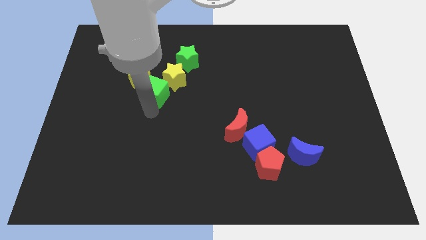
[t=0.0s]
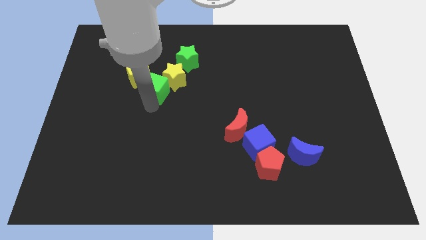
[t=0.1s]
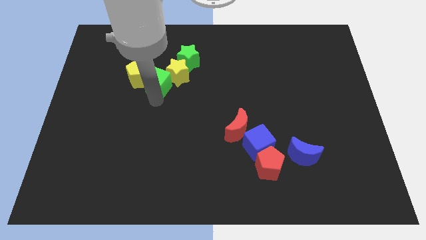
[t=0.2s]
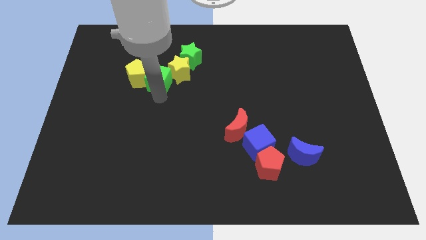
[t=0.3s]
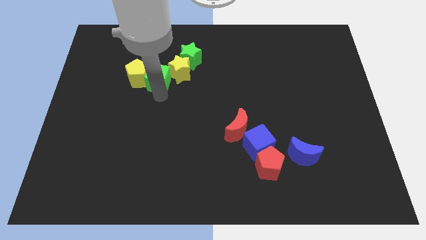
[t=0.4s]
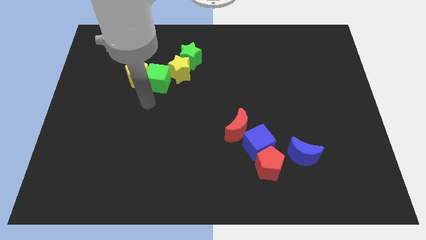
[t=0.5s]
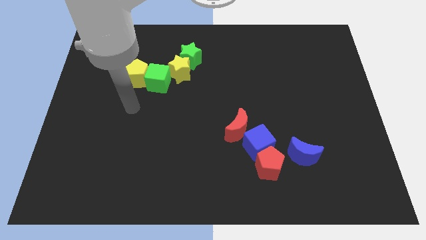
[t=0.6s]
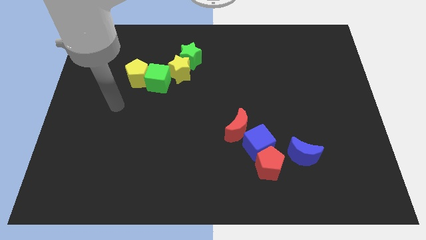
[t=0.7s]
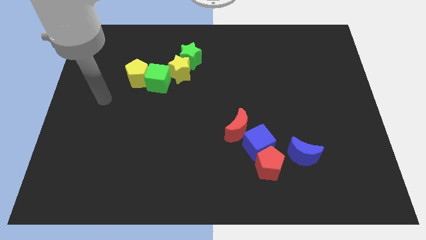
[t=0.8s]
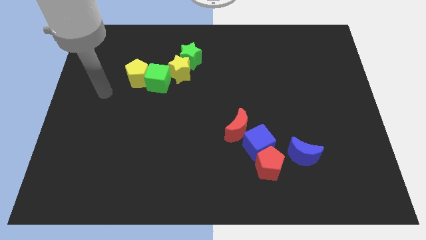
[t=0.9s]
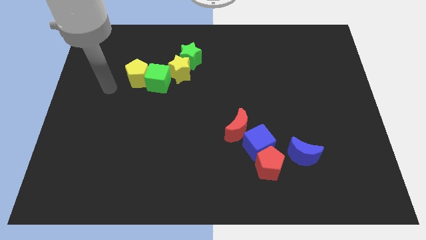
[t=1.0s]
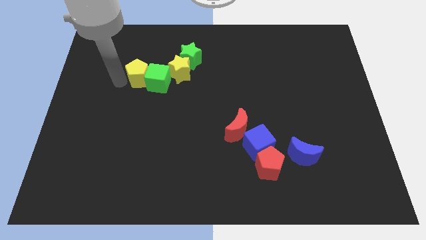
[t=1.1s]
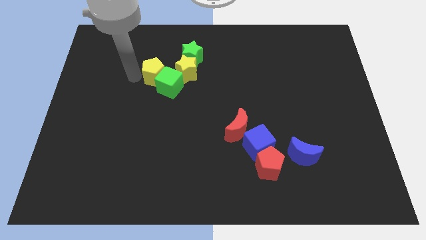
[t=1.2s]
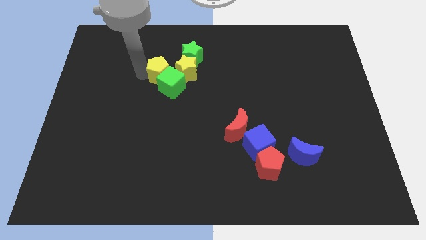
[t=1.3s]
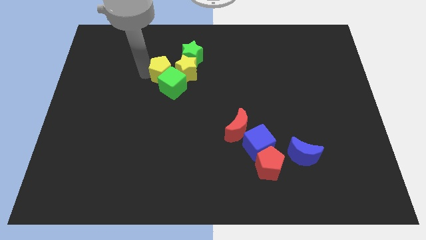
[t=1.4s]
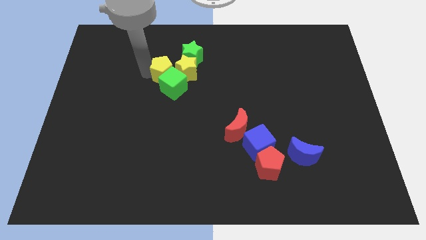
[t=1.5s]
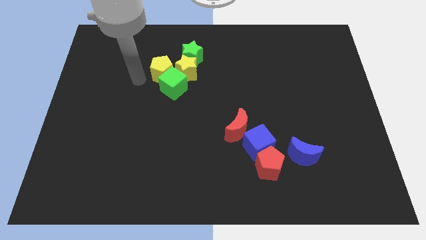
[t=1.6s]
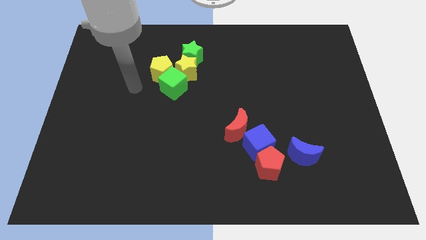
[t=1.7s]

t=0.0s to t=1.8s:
move the green cube to the bottom of the yellow pentagon

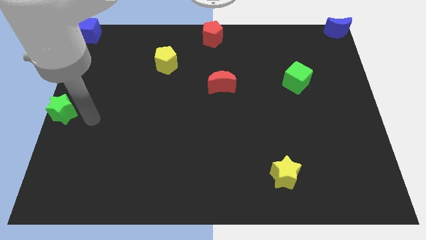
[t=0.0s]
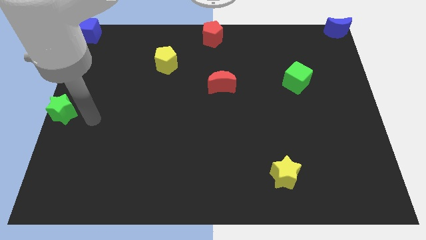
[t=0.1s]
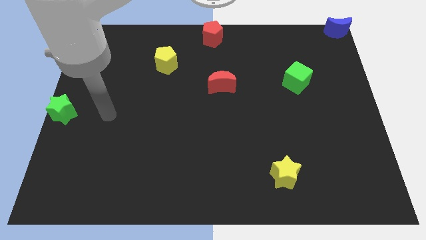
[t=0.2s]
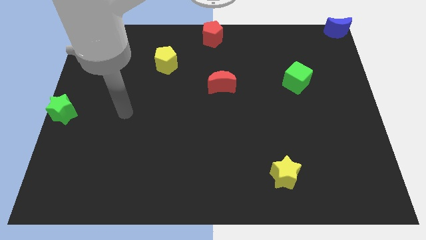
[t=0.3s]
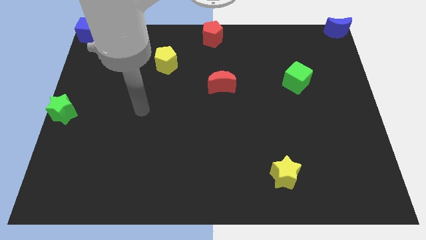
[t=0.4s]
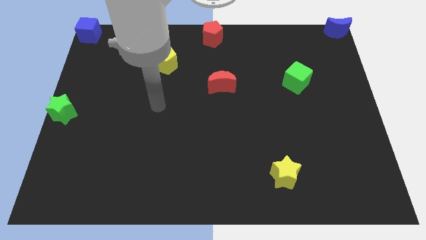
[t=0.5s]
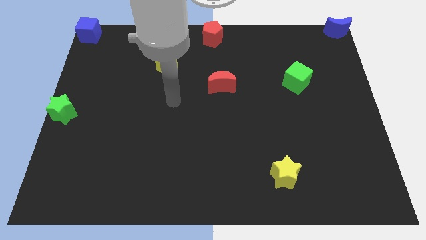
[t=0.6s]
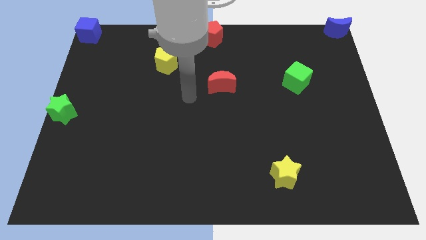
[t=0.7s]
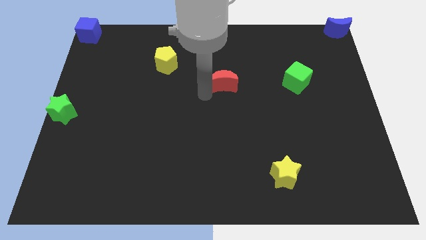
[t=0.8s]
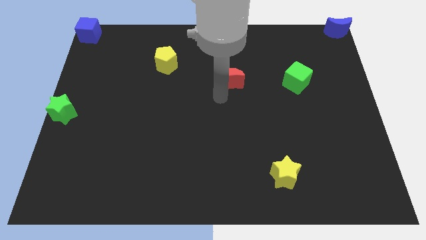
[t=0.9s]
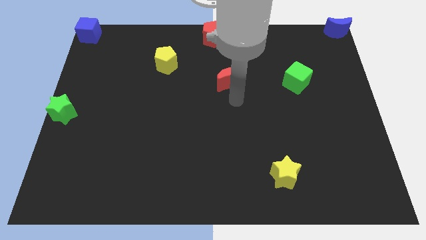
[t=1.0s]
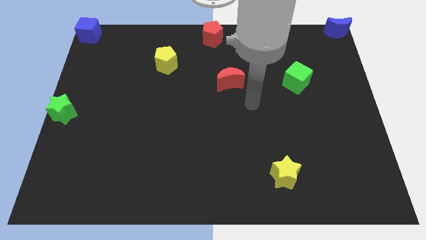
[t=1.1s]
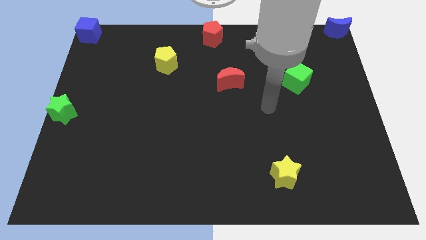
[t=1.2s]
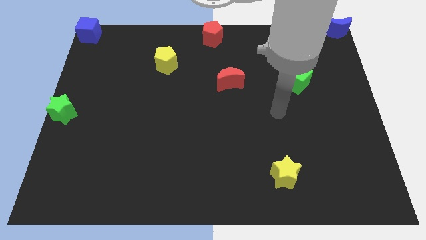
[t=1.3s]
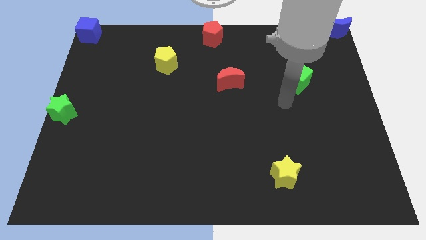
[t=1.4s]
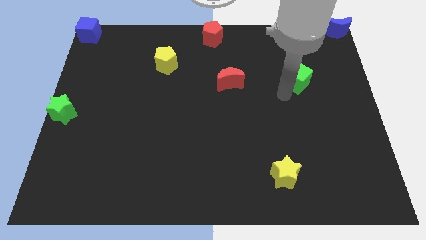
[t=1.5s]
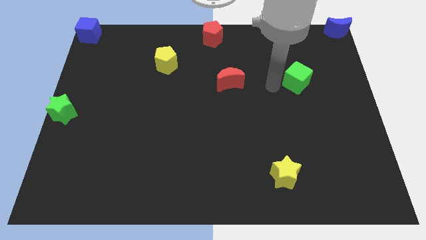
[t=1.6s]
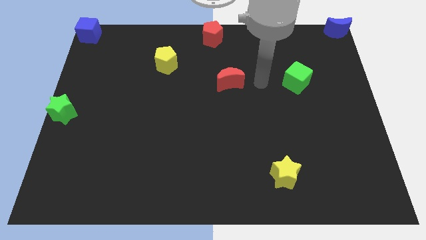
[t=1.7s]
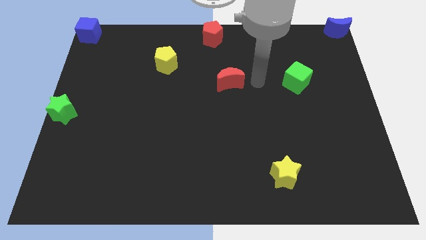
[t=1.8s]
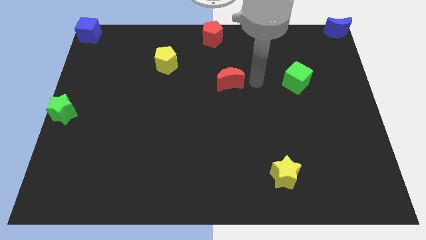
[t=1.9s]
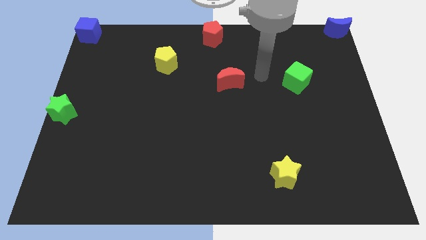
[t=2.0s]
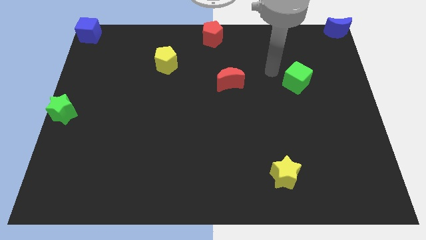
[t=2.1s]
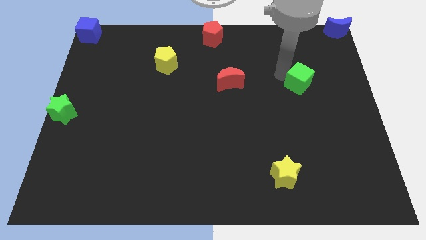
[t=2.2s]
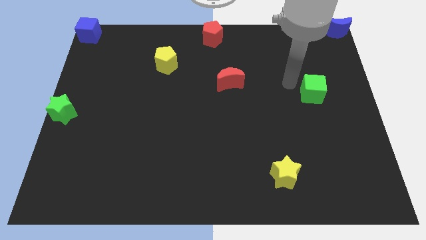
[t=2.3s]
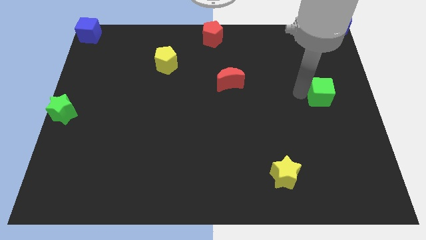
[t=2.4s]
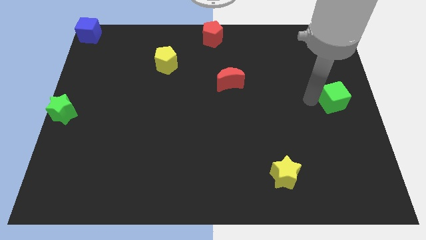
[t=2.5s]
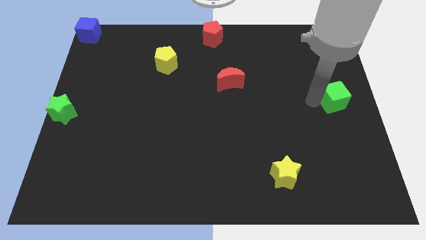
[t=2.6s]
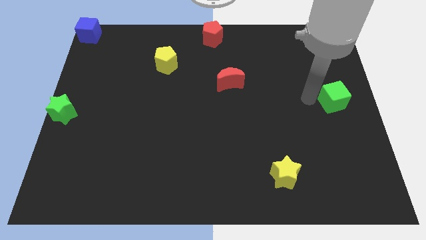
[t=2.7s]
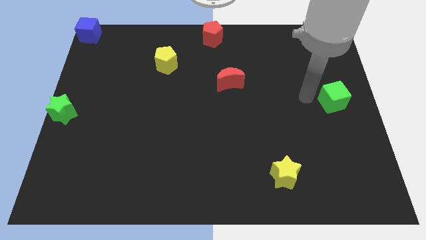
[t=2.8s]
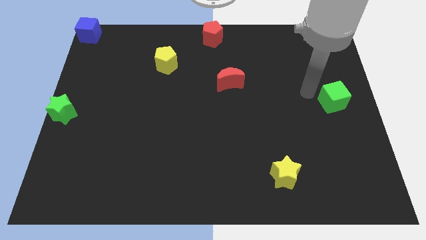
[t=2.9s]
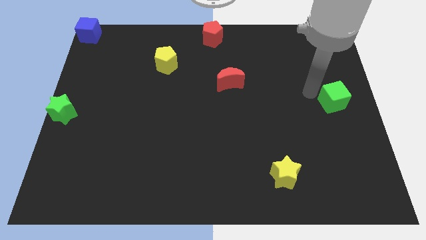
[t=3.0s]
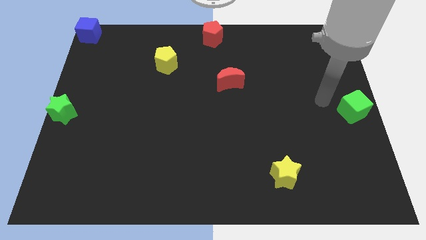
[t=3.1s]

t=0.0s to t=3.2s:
slightly move the green cube right center of the board

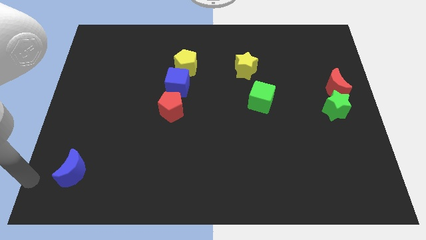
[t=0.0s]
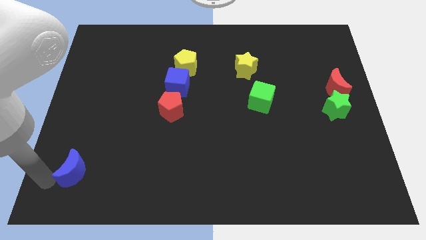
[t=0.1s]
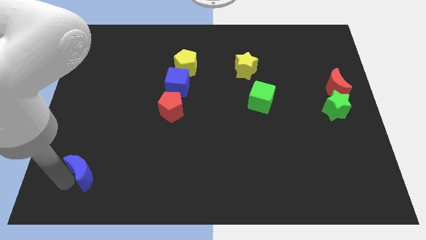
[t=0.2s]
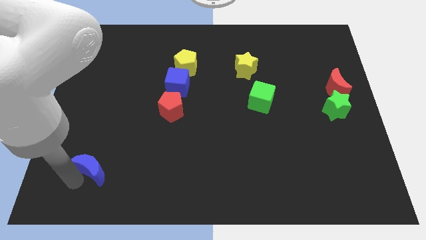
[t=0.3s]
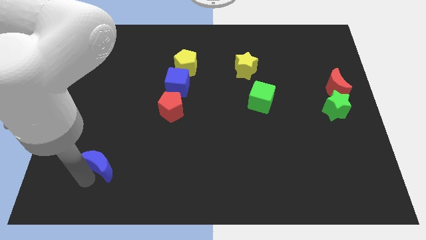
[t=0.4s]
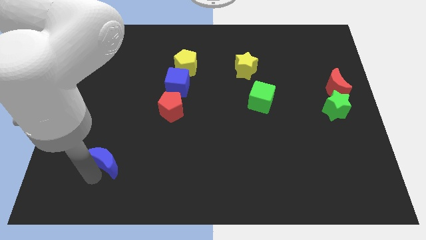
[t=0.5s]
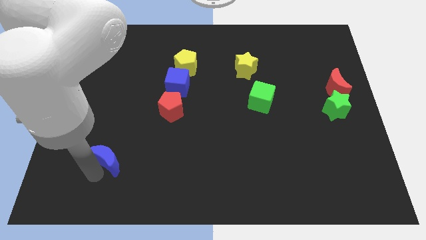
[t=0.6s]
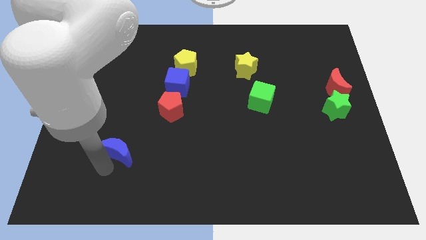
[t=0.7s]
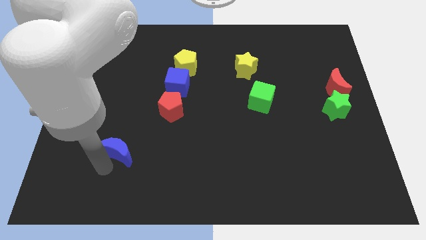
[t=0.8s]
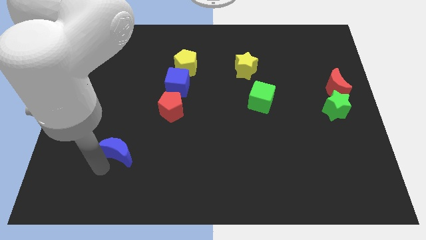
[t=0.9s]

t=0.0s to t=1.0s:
move the blue crescent to the bottom center of the board

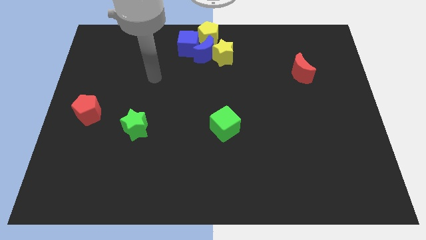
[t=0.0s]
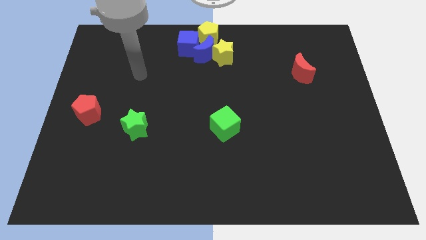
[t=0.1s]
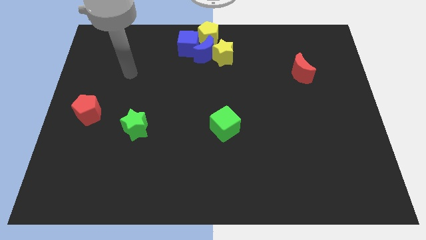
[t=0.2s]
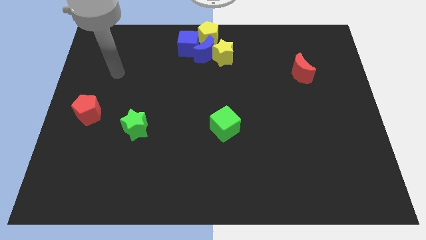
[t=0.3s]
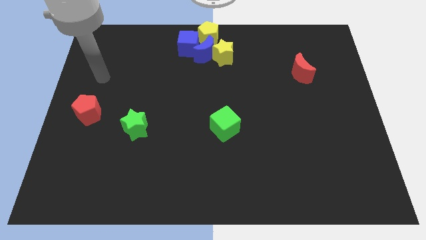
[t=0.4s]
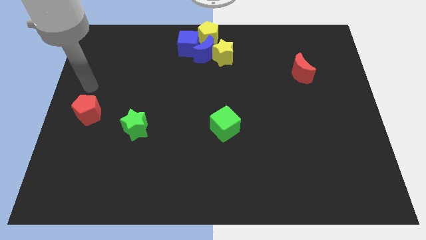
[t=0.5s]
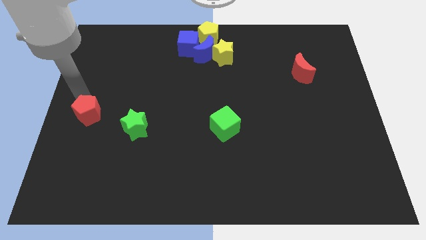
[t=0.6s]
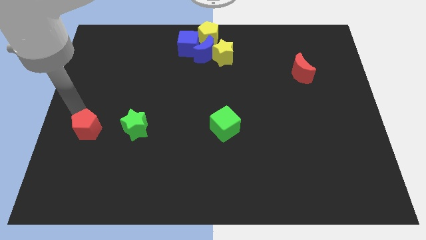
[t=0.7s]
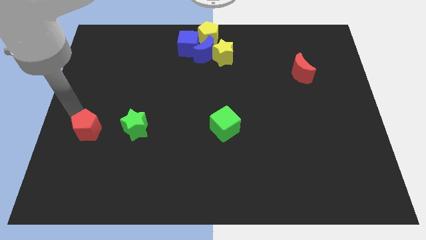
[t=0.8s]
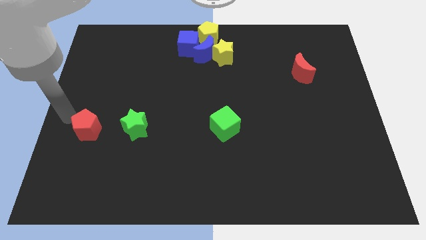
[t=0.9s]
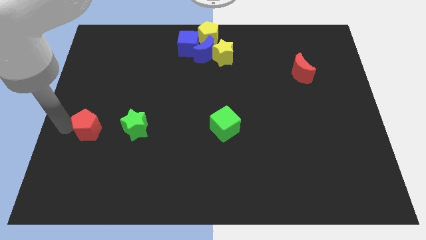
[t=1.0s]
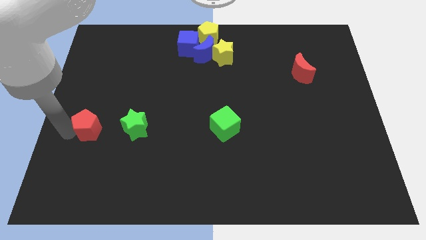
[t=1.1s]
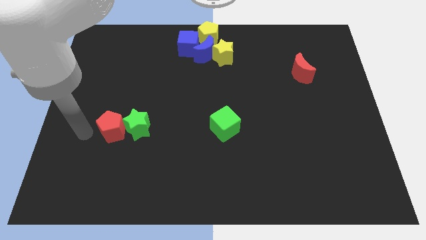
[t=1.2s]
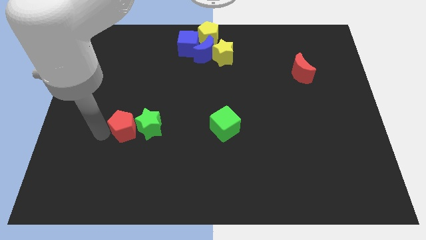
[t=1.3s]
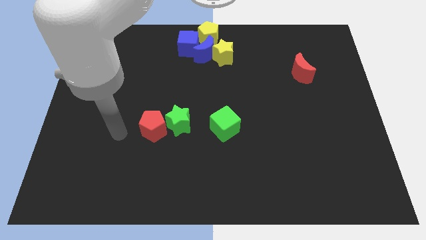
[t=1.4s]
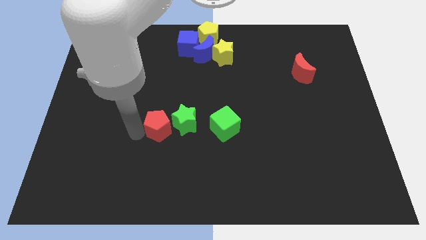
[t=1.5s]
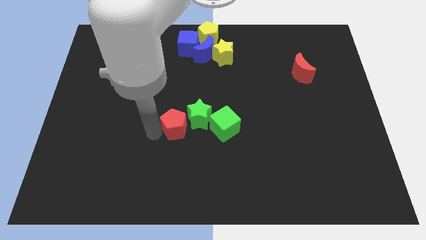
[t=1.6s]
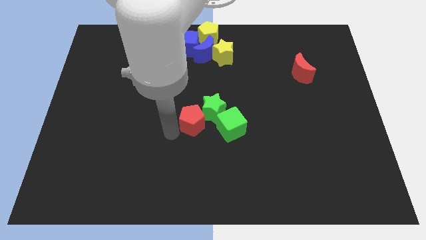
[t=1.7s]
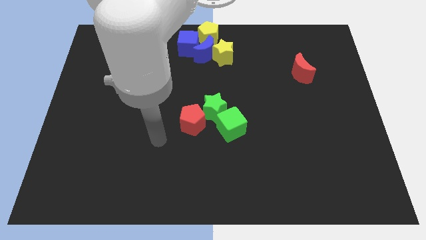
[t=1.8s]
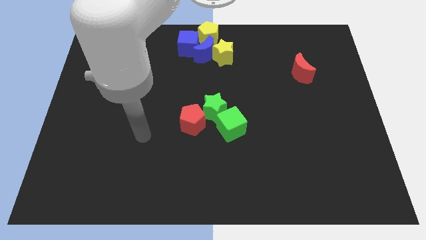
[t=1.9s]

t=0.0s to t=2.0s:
place the green star green cube and red pentagon towards the center of the board

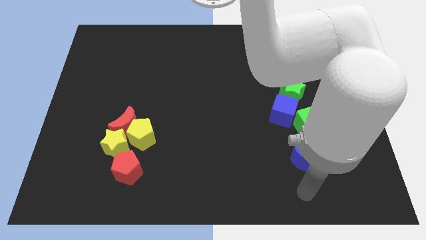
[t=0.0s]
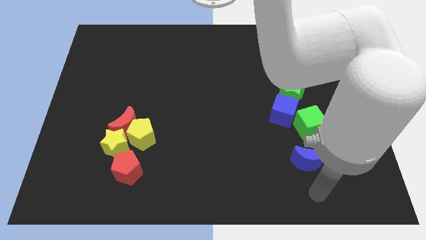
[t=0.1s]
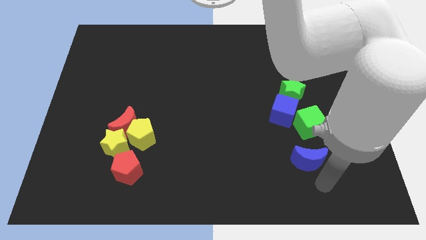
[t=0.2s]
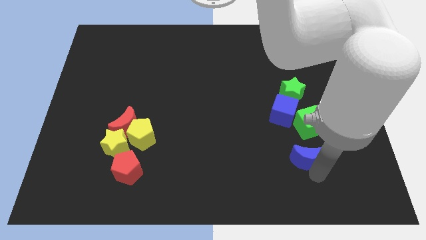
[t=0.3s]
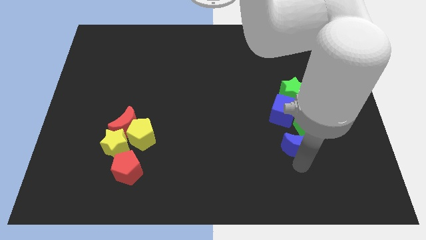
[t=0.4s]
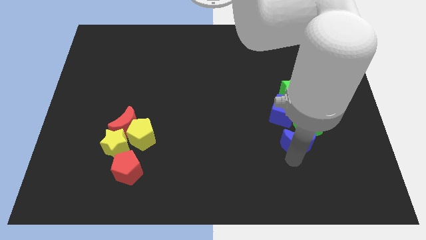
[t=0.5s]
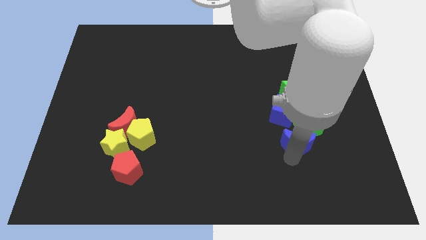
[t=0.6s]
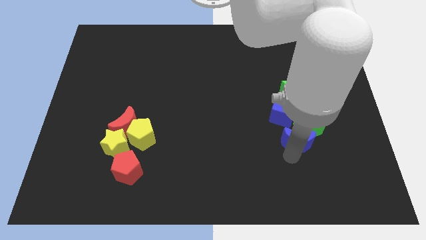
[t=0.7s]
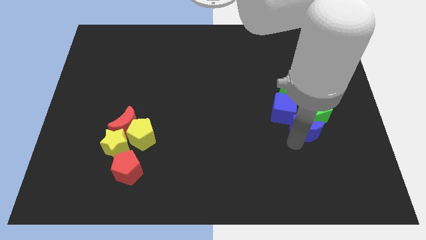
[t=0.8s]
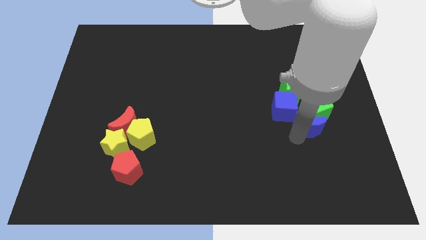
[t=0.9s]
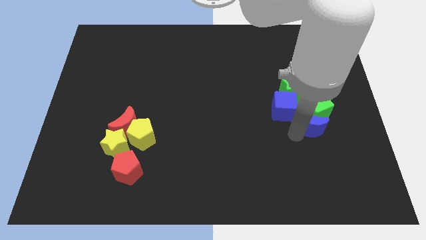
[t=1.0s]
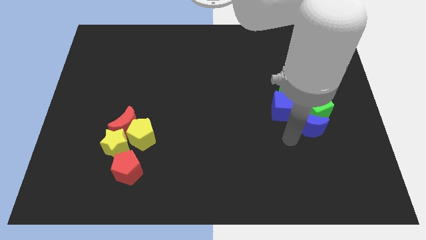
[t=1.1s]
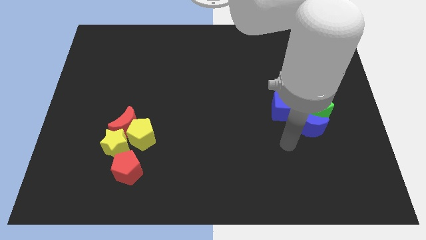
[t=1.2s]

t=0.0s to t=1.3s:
push the blue crescent into the green cube
